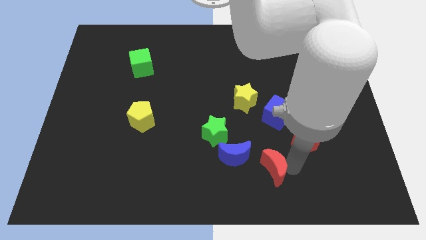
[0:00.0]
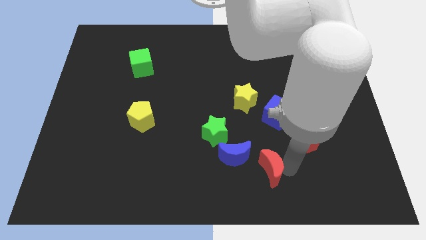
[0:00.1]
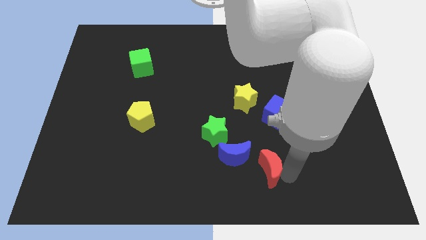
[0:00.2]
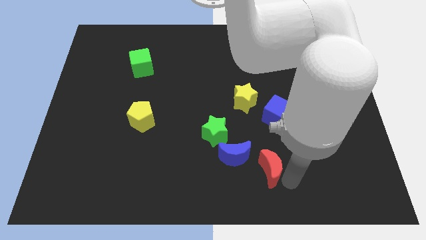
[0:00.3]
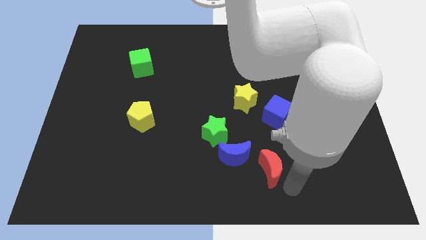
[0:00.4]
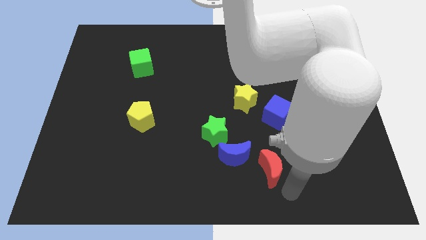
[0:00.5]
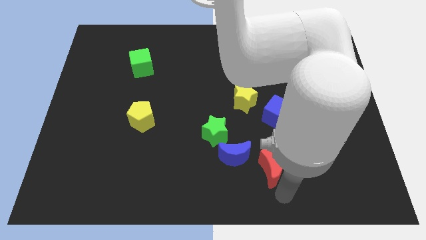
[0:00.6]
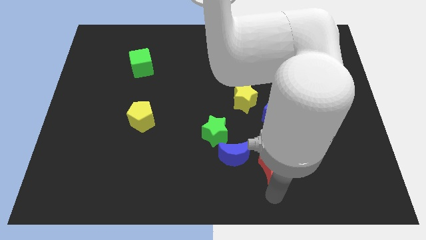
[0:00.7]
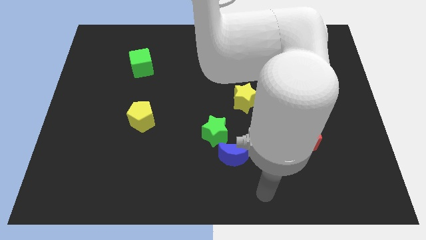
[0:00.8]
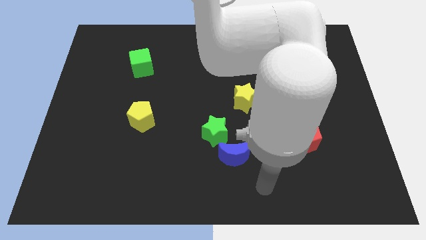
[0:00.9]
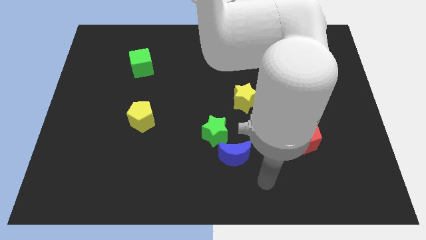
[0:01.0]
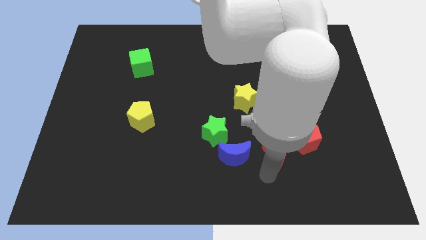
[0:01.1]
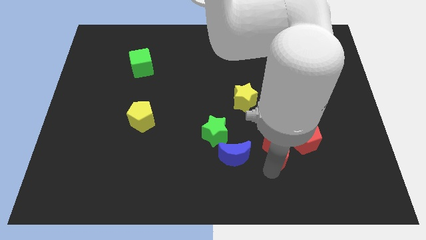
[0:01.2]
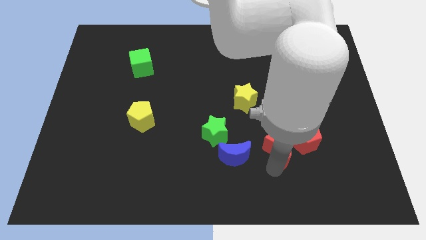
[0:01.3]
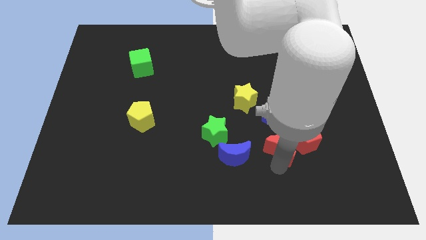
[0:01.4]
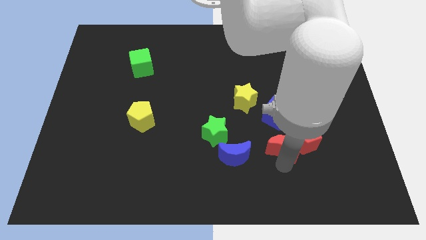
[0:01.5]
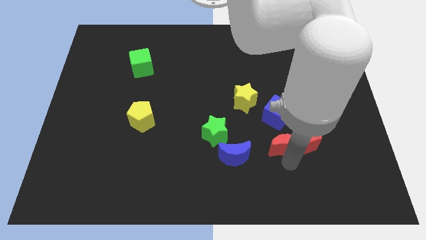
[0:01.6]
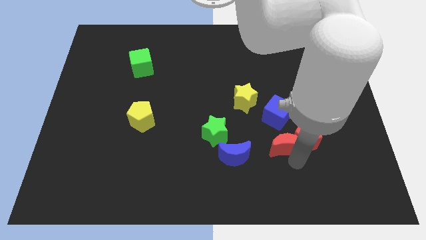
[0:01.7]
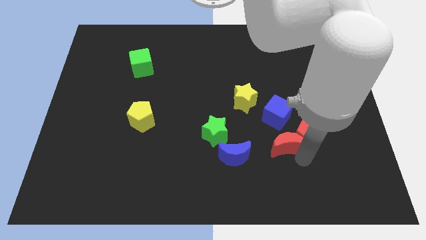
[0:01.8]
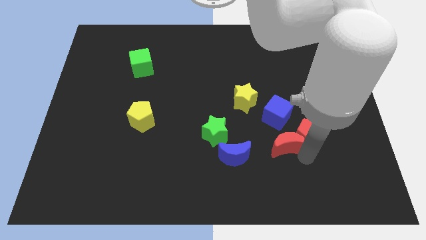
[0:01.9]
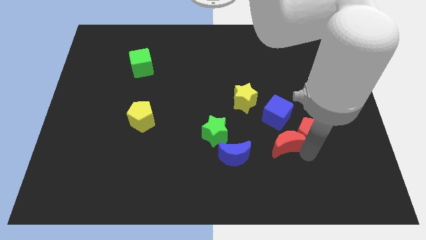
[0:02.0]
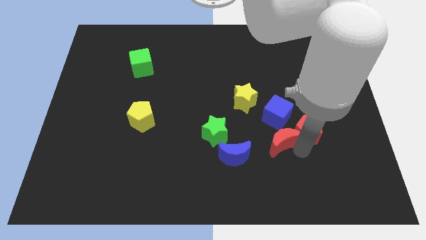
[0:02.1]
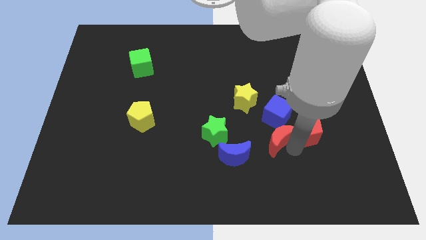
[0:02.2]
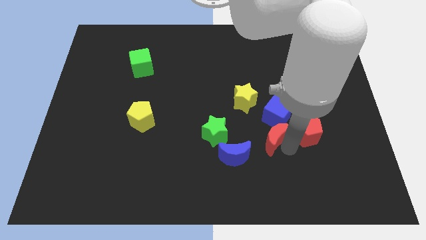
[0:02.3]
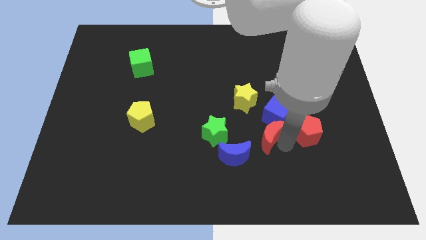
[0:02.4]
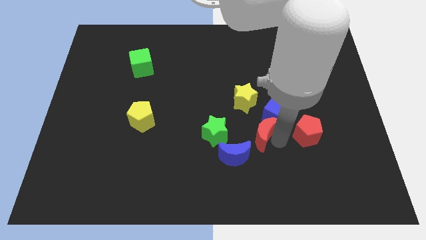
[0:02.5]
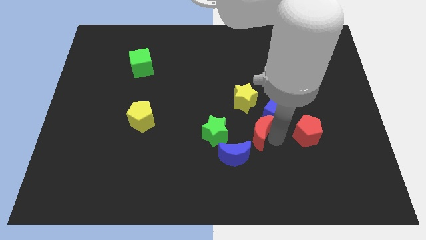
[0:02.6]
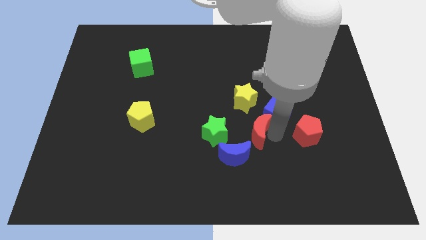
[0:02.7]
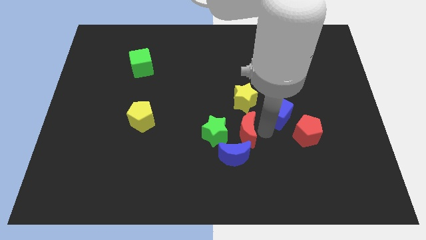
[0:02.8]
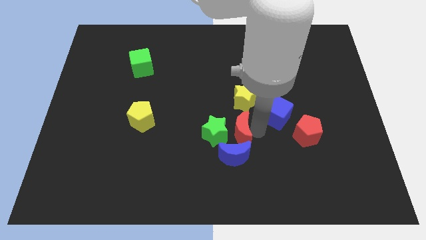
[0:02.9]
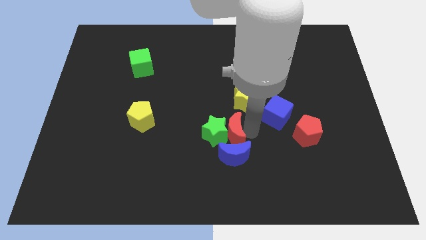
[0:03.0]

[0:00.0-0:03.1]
place the red moon to the right of the green star

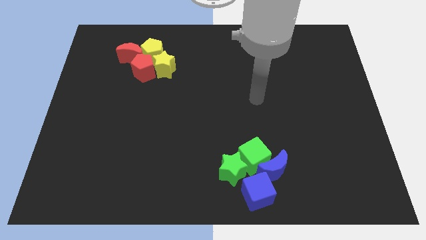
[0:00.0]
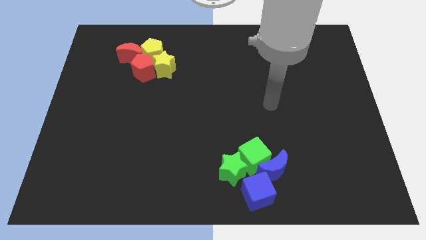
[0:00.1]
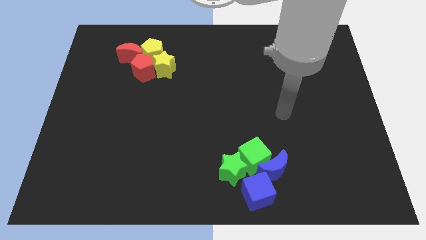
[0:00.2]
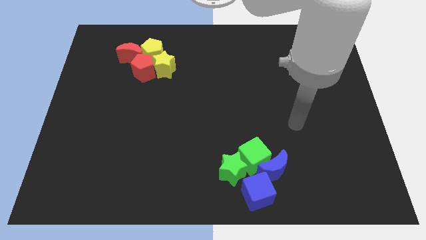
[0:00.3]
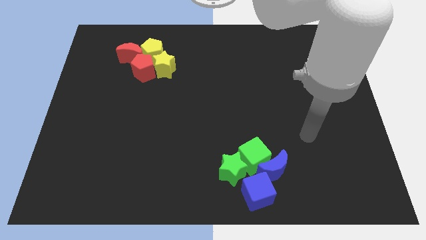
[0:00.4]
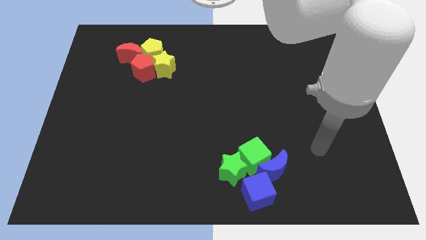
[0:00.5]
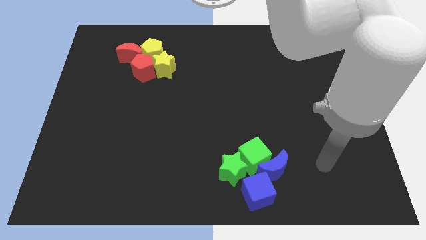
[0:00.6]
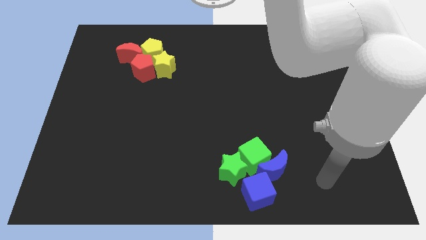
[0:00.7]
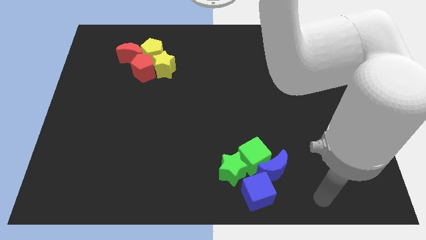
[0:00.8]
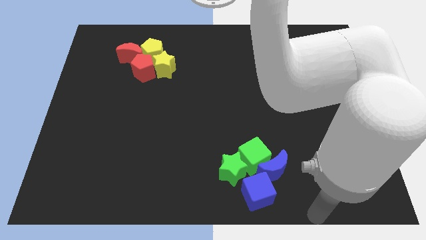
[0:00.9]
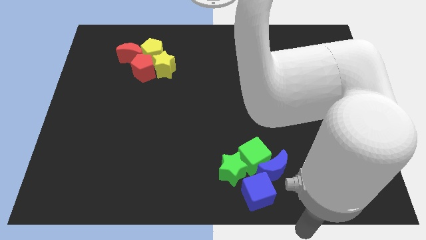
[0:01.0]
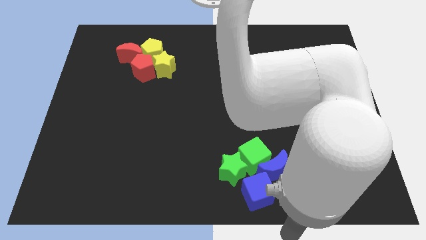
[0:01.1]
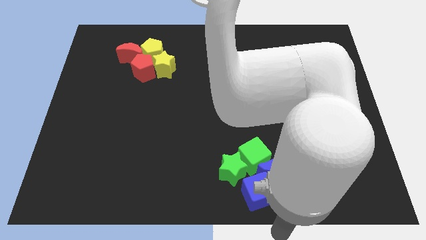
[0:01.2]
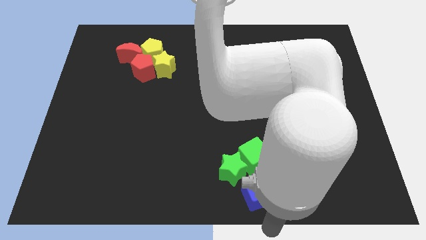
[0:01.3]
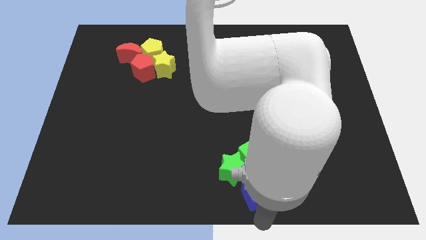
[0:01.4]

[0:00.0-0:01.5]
place your hand under the blue cube

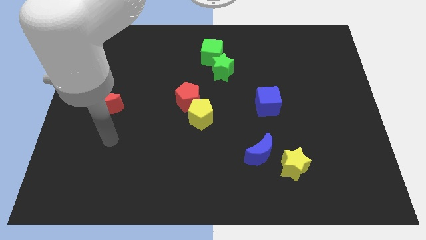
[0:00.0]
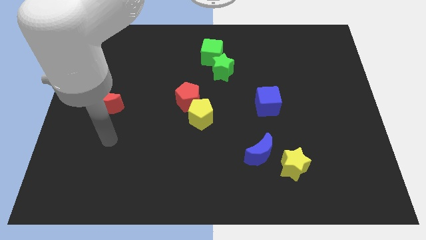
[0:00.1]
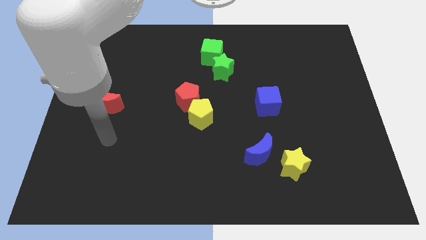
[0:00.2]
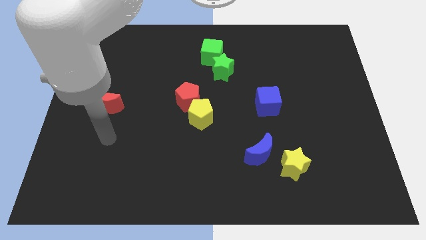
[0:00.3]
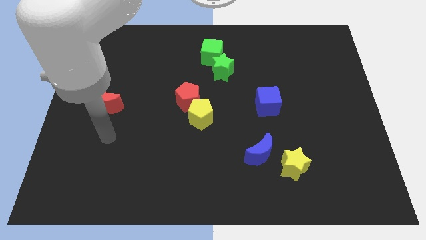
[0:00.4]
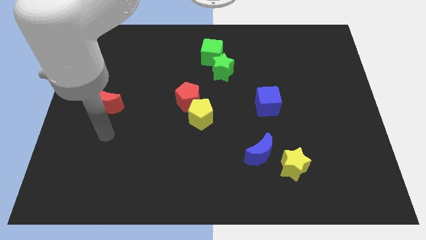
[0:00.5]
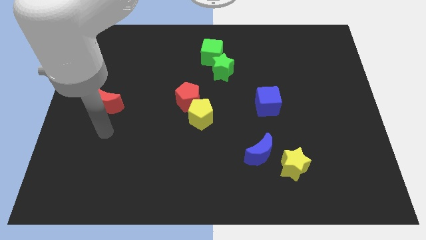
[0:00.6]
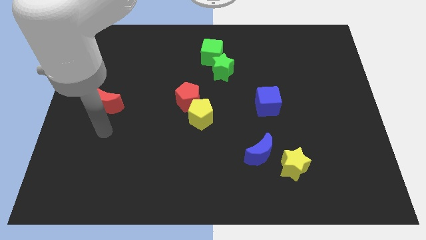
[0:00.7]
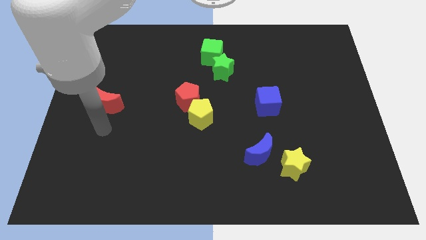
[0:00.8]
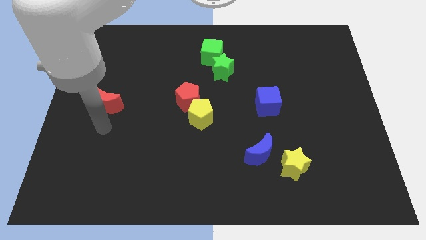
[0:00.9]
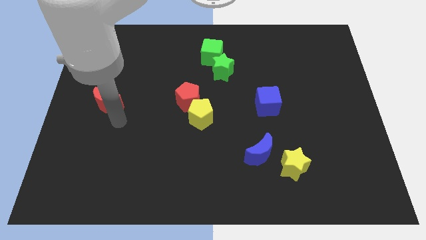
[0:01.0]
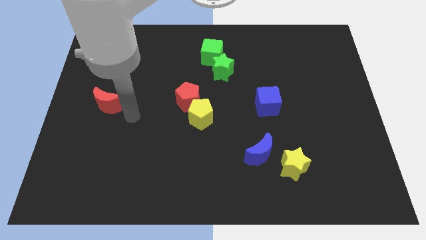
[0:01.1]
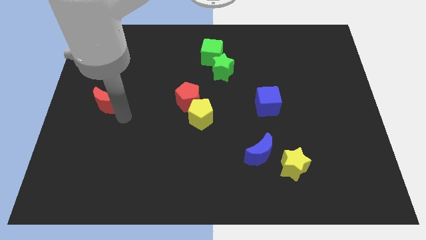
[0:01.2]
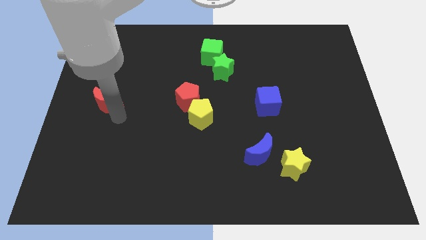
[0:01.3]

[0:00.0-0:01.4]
move your arm to the bottom side of the red moon

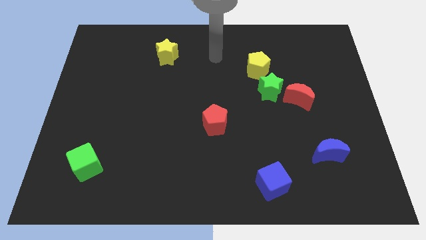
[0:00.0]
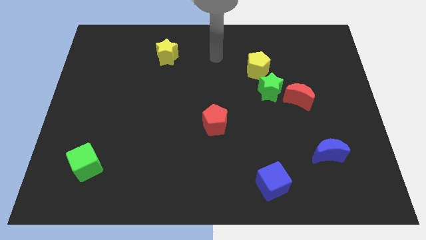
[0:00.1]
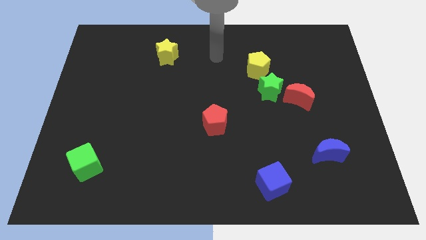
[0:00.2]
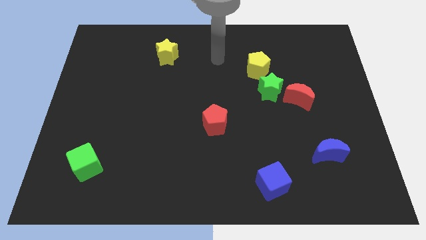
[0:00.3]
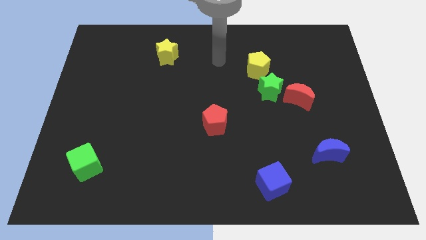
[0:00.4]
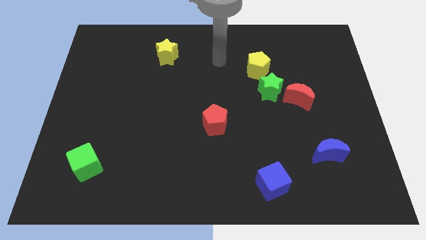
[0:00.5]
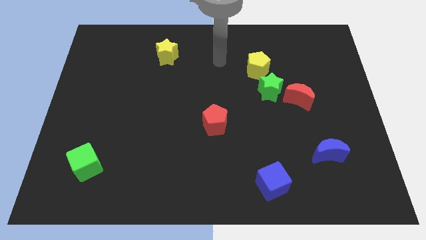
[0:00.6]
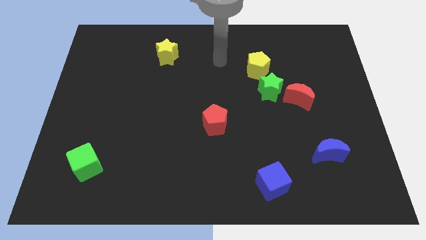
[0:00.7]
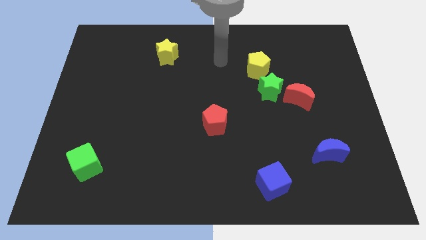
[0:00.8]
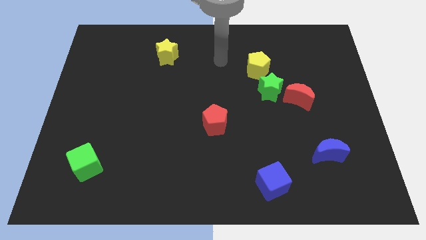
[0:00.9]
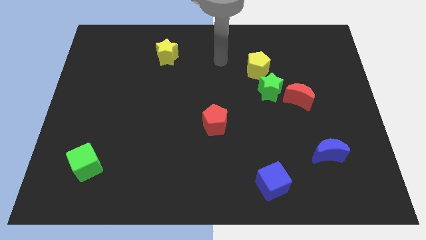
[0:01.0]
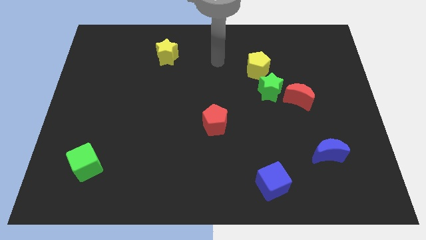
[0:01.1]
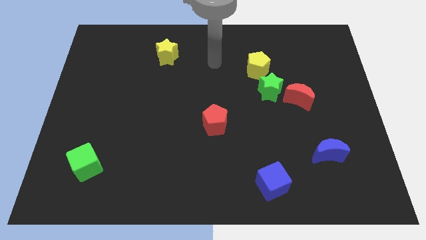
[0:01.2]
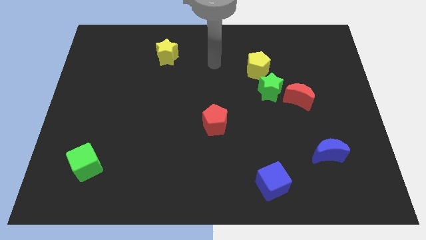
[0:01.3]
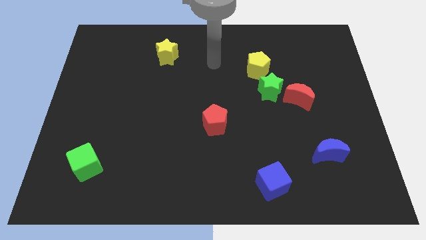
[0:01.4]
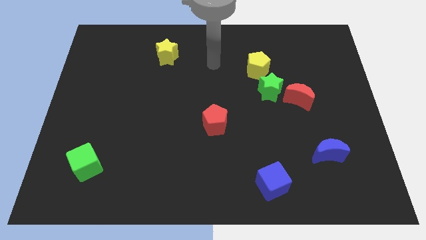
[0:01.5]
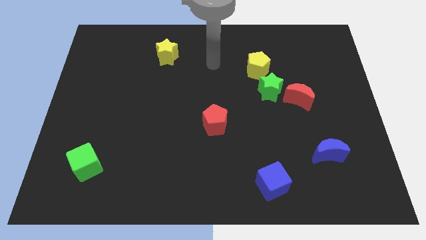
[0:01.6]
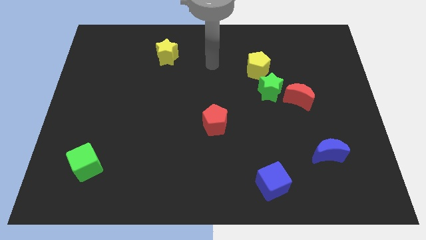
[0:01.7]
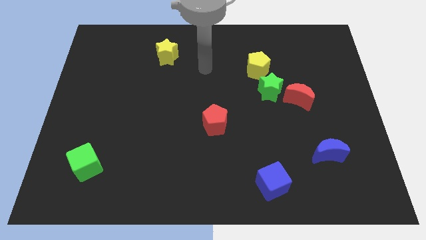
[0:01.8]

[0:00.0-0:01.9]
point the arm above the red pentagon

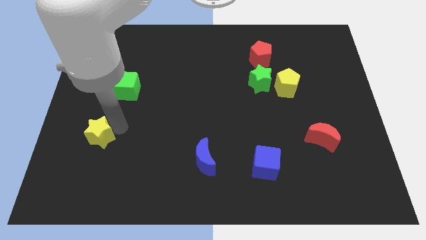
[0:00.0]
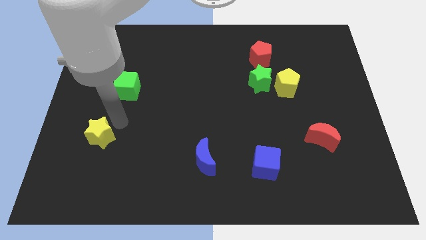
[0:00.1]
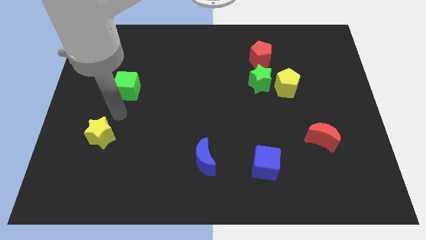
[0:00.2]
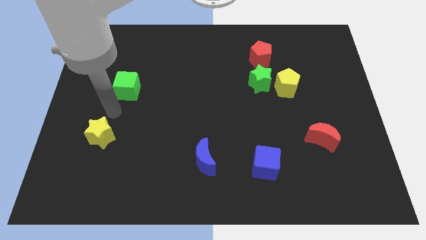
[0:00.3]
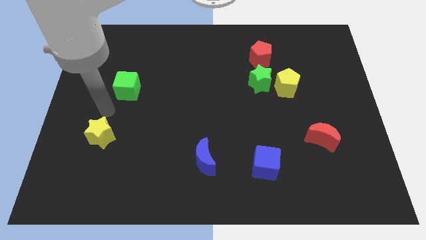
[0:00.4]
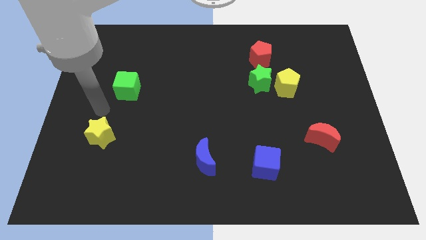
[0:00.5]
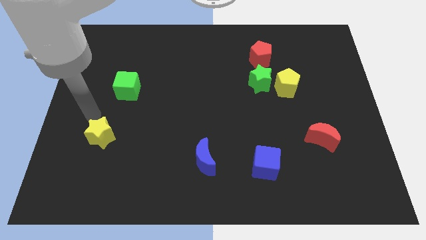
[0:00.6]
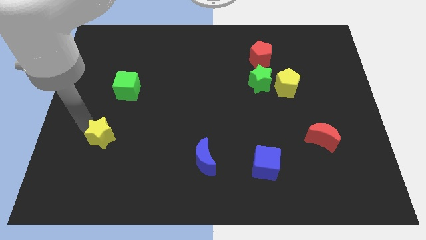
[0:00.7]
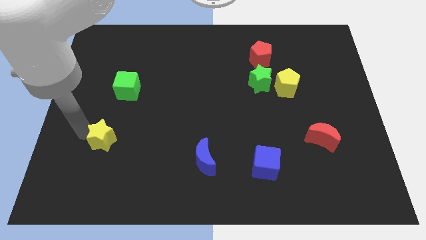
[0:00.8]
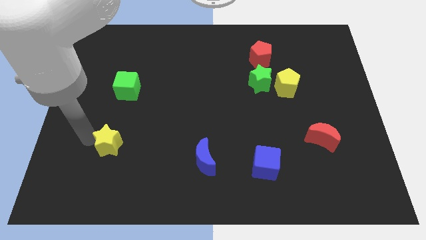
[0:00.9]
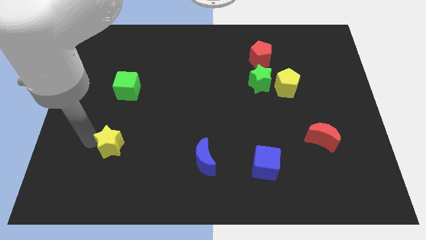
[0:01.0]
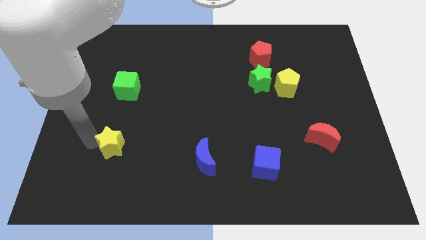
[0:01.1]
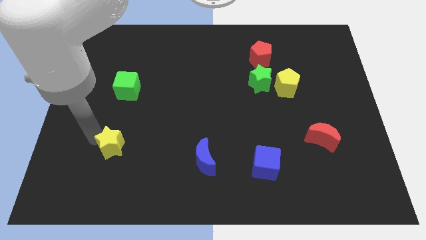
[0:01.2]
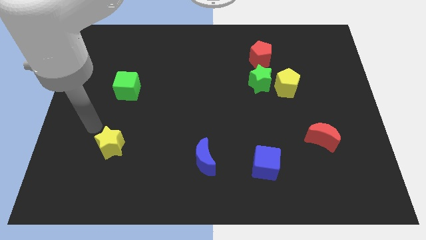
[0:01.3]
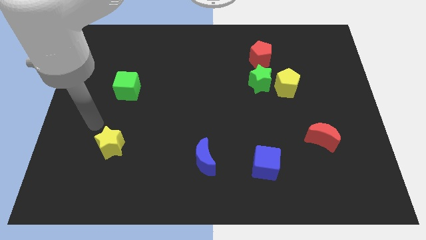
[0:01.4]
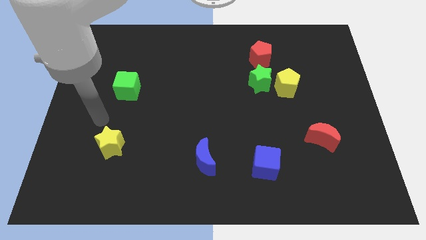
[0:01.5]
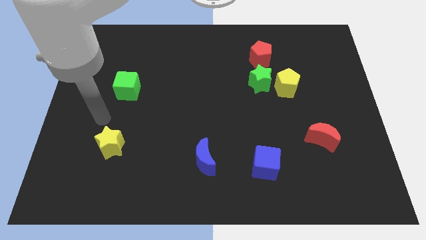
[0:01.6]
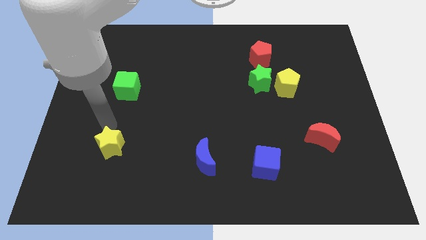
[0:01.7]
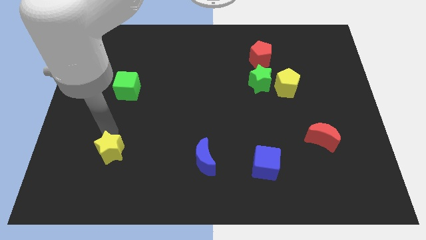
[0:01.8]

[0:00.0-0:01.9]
push yellow star vertically below green cube
